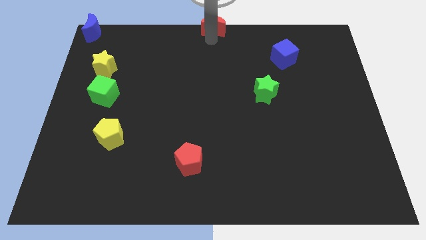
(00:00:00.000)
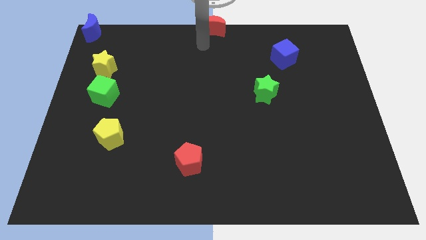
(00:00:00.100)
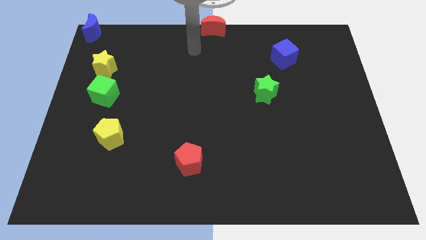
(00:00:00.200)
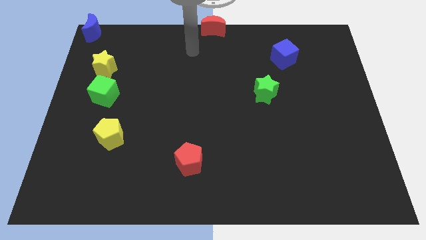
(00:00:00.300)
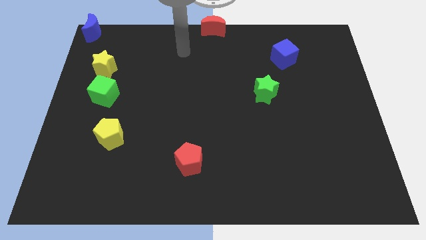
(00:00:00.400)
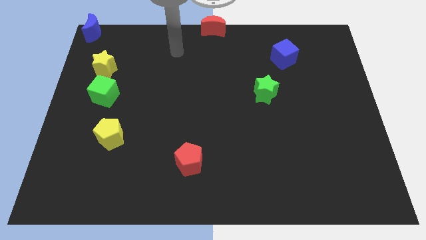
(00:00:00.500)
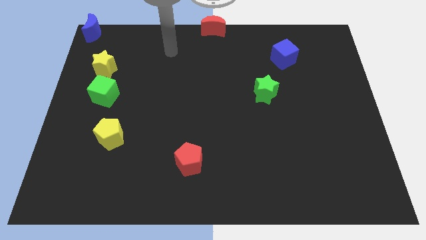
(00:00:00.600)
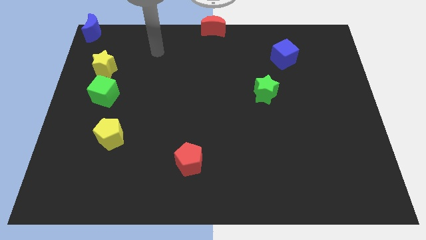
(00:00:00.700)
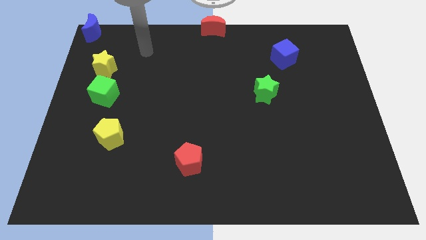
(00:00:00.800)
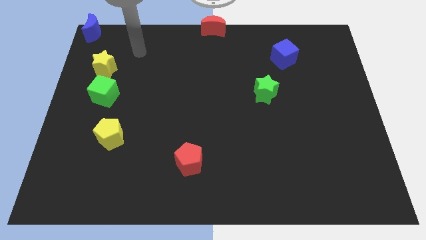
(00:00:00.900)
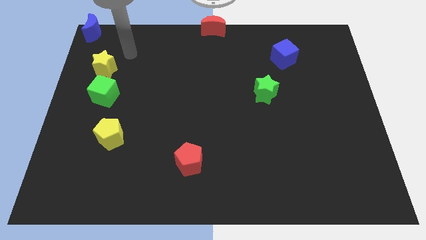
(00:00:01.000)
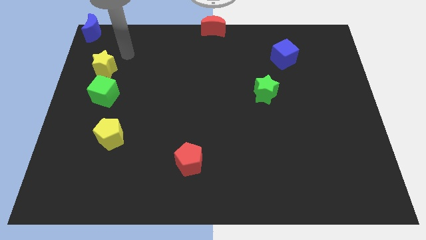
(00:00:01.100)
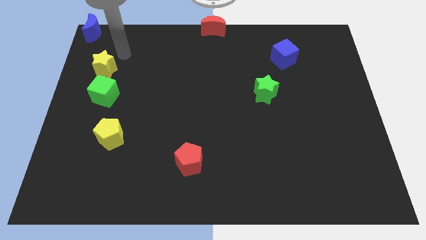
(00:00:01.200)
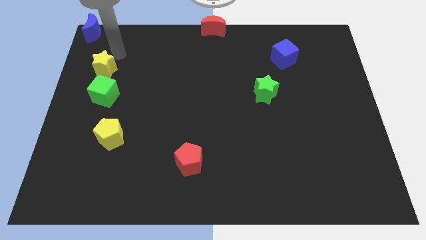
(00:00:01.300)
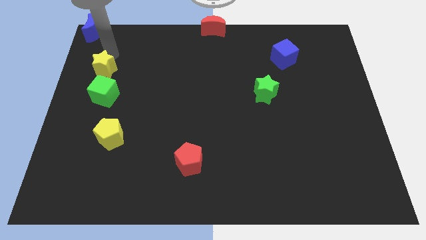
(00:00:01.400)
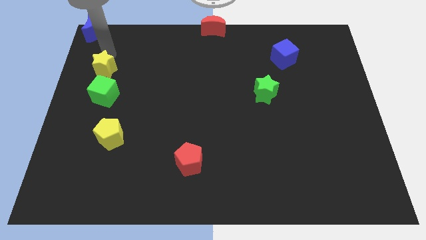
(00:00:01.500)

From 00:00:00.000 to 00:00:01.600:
move your hand towards the top of the yellow star

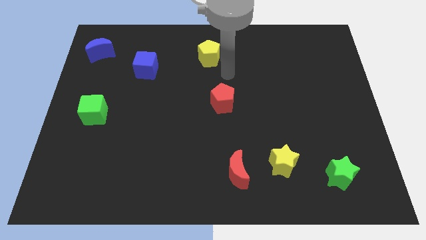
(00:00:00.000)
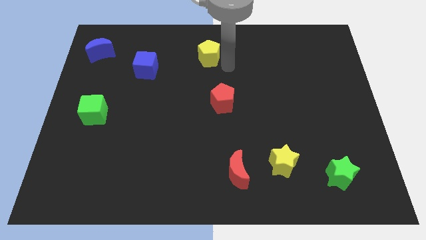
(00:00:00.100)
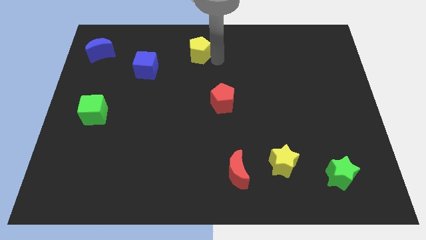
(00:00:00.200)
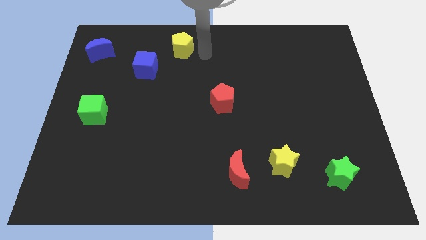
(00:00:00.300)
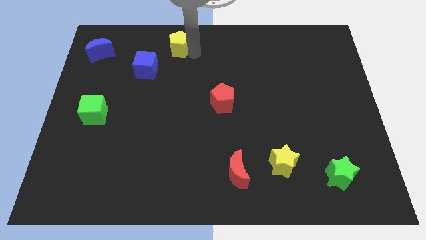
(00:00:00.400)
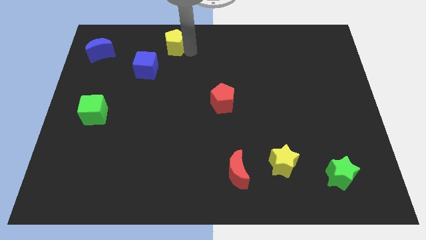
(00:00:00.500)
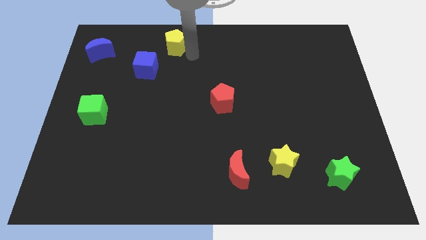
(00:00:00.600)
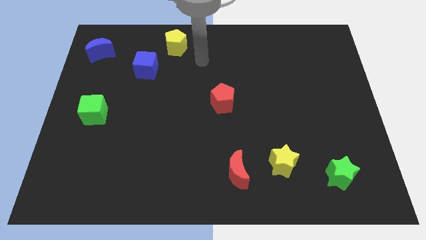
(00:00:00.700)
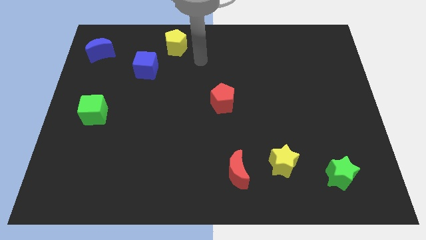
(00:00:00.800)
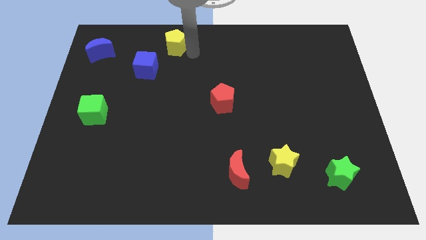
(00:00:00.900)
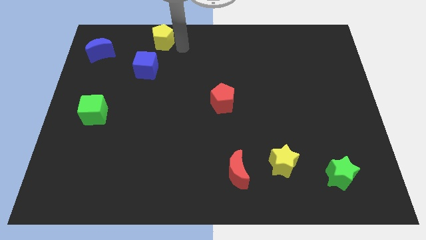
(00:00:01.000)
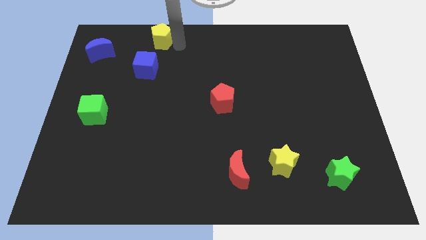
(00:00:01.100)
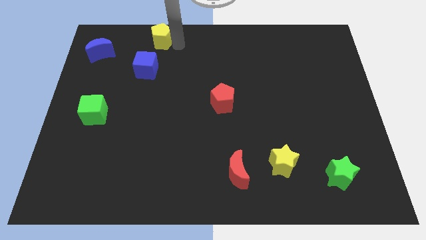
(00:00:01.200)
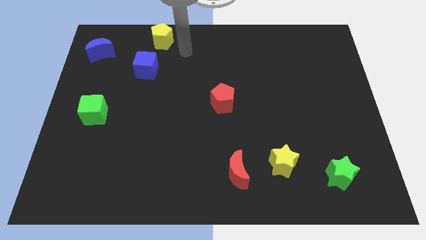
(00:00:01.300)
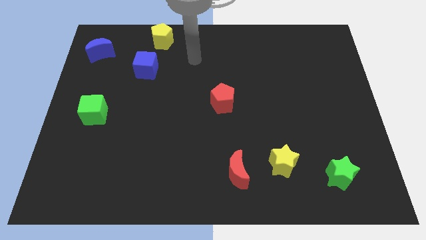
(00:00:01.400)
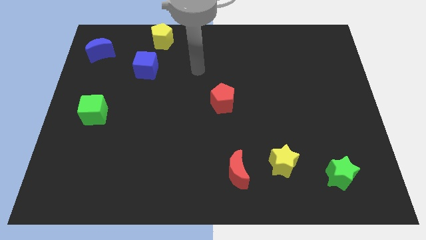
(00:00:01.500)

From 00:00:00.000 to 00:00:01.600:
push the yellow pentagon slightly to the top left of the board

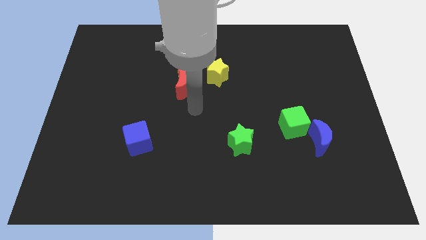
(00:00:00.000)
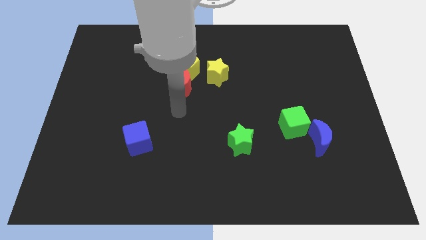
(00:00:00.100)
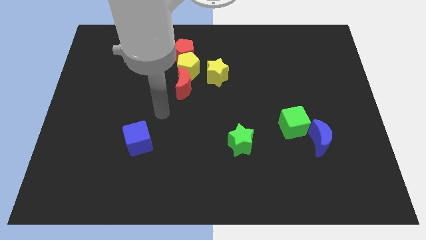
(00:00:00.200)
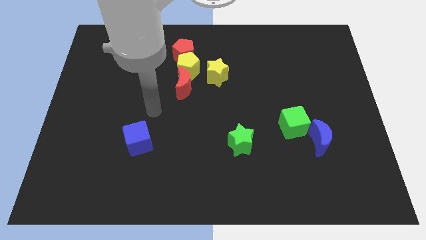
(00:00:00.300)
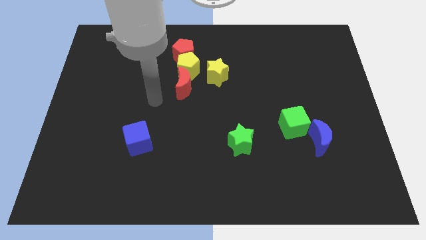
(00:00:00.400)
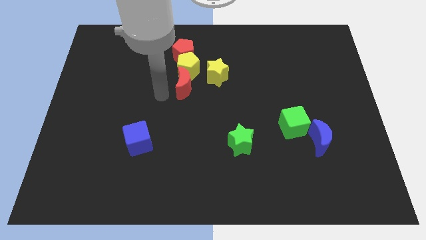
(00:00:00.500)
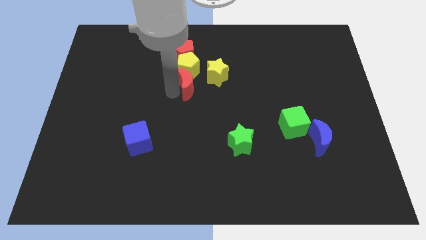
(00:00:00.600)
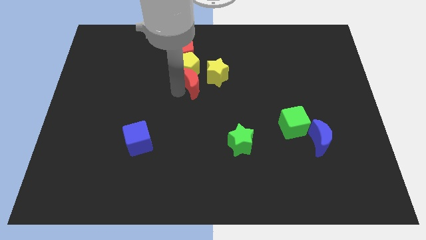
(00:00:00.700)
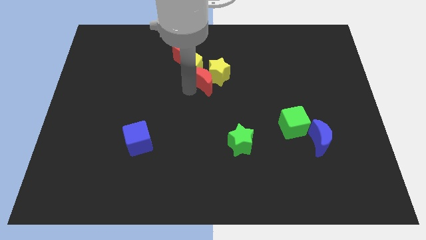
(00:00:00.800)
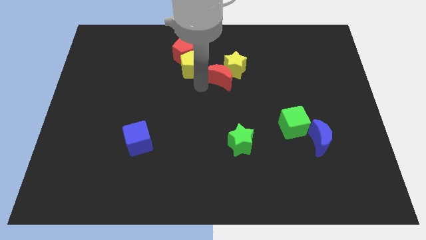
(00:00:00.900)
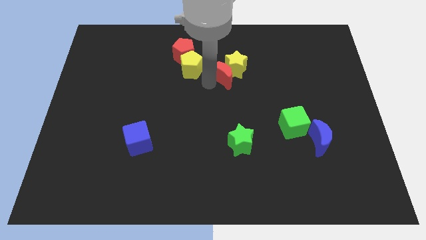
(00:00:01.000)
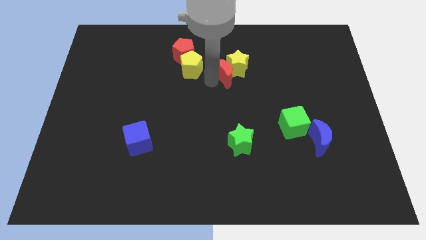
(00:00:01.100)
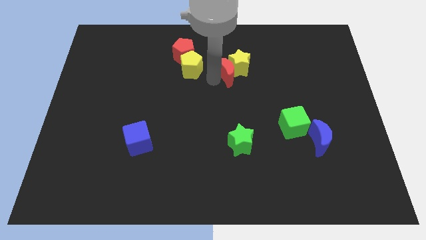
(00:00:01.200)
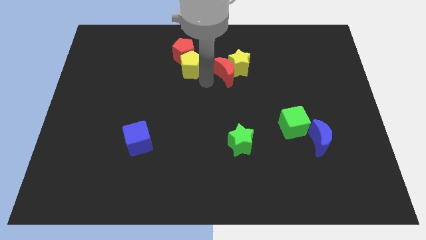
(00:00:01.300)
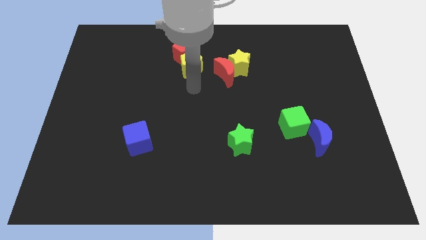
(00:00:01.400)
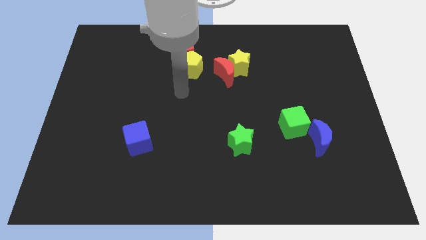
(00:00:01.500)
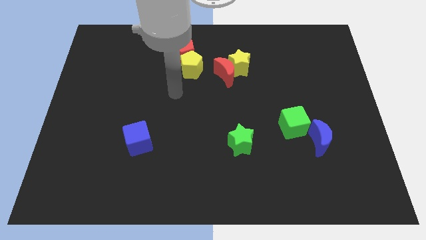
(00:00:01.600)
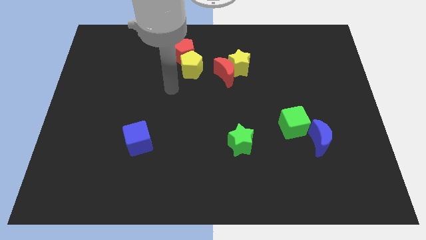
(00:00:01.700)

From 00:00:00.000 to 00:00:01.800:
push red crescent into yellow star

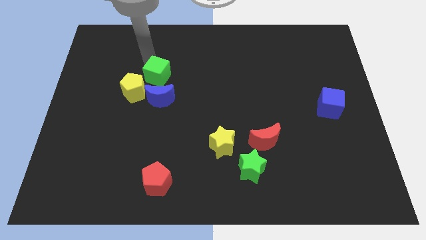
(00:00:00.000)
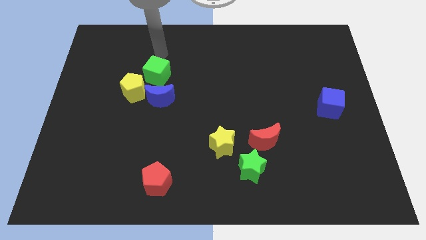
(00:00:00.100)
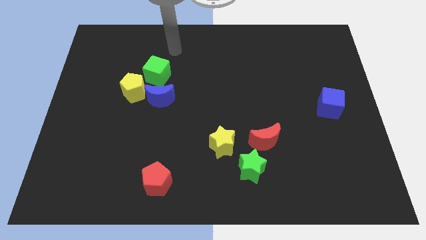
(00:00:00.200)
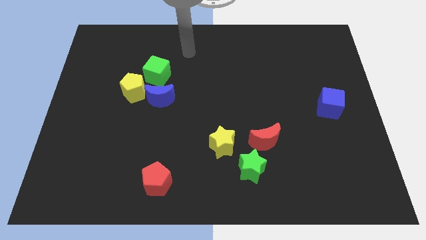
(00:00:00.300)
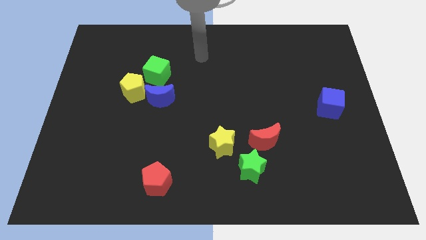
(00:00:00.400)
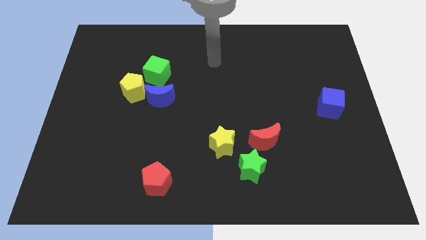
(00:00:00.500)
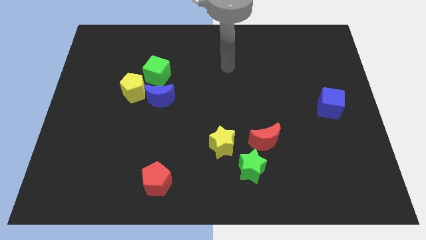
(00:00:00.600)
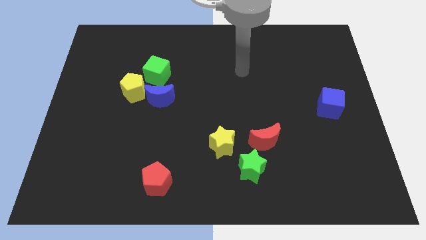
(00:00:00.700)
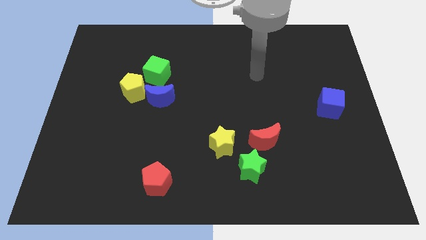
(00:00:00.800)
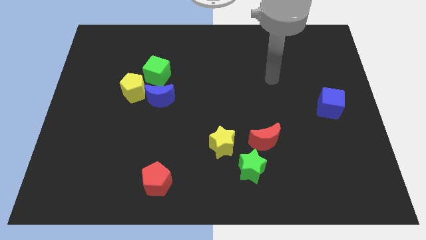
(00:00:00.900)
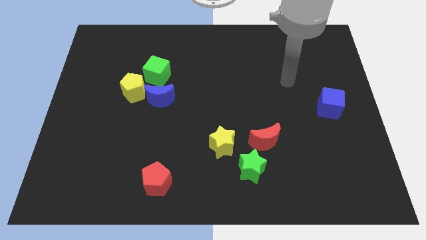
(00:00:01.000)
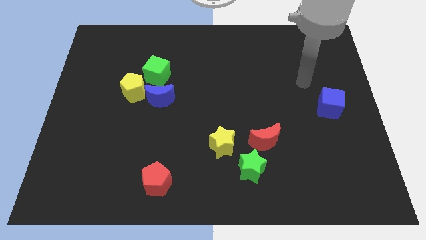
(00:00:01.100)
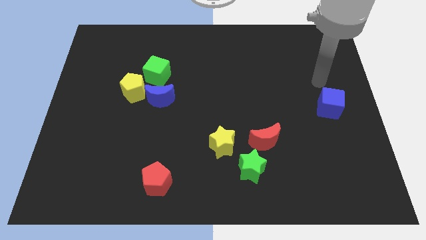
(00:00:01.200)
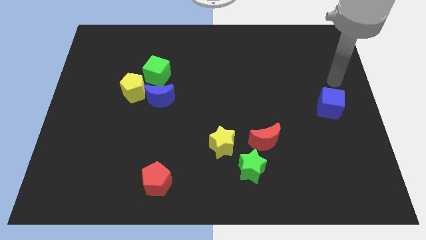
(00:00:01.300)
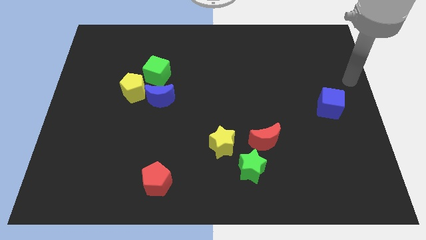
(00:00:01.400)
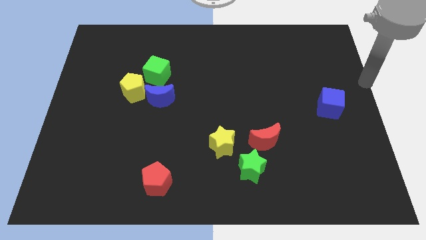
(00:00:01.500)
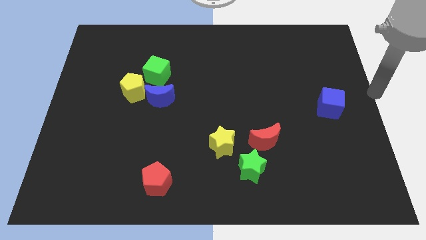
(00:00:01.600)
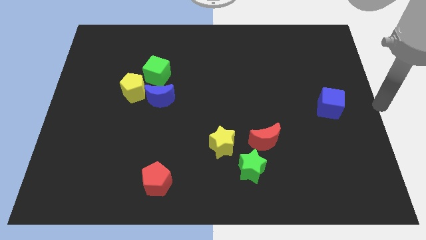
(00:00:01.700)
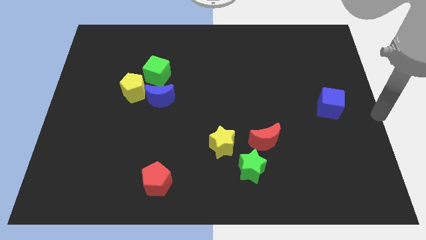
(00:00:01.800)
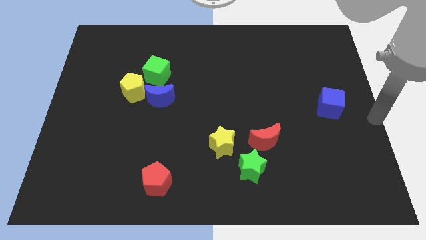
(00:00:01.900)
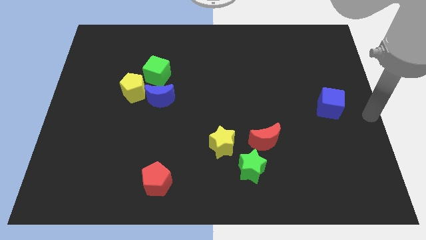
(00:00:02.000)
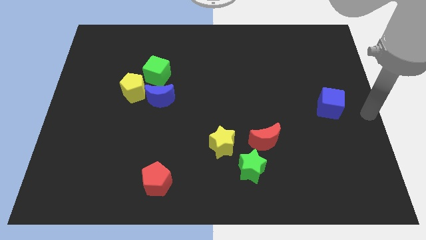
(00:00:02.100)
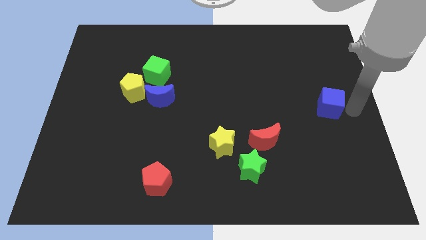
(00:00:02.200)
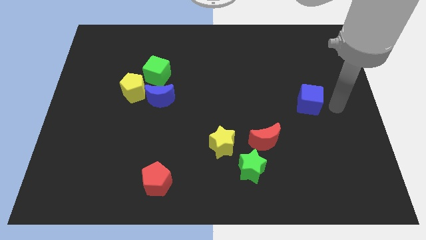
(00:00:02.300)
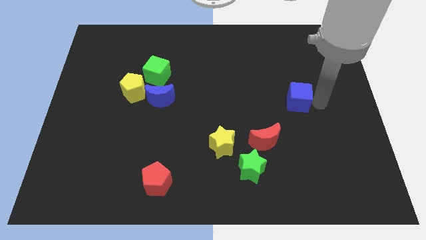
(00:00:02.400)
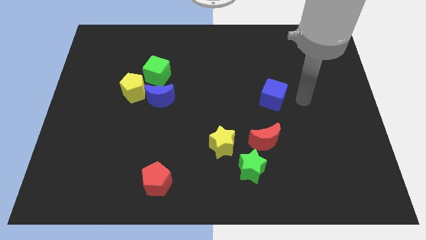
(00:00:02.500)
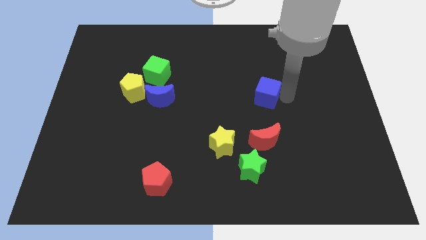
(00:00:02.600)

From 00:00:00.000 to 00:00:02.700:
place blue cube at the center of the board

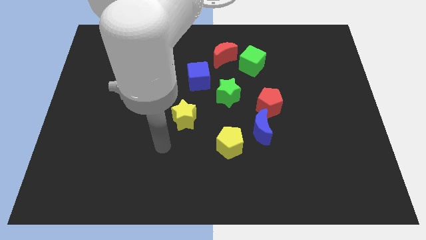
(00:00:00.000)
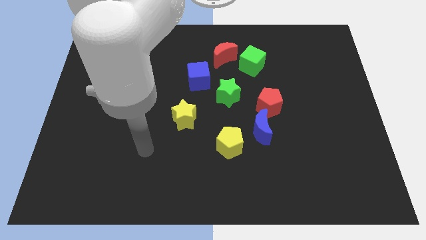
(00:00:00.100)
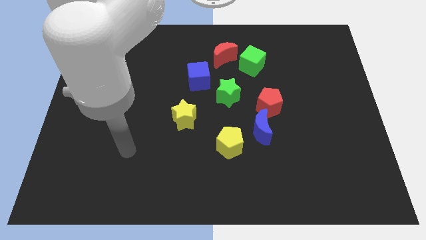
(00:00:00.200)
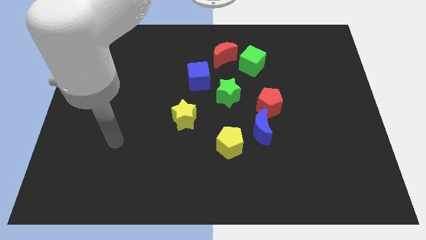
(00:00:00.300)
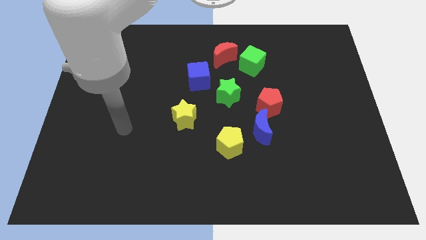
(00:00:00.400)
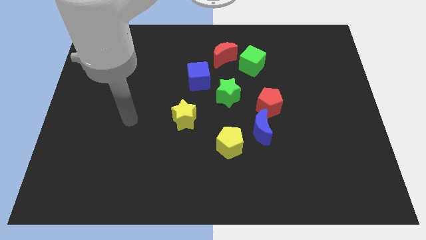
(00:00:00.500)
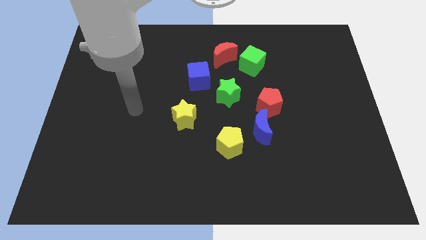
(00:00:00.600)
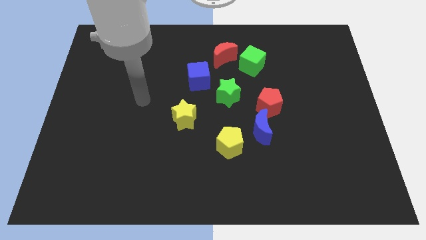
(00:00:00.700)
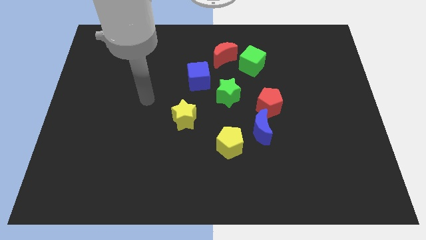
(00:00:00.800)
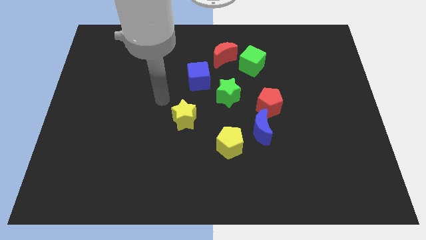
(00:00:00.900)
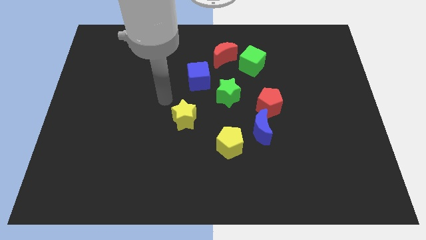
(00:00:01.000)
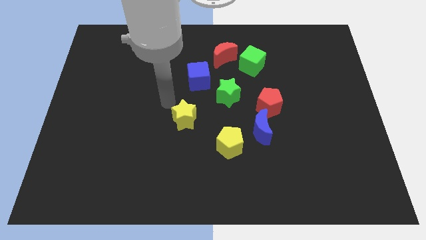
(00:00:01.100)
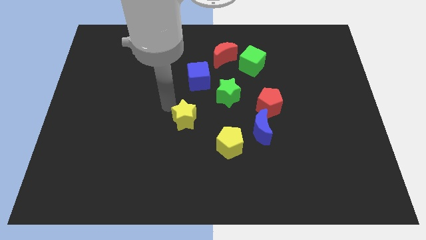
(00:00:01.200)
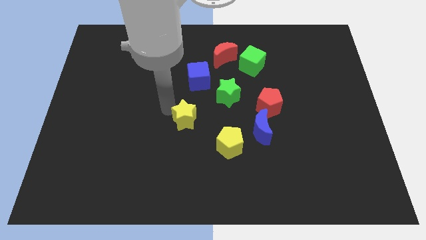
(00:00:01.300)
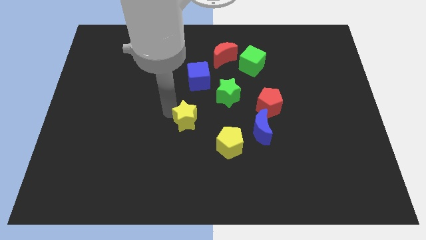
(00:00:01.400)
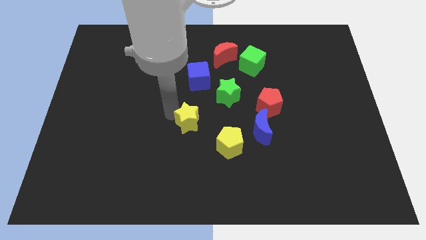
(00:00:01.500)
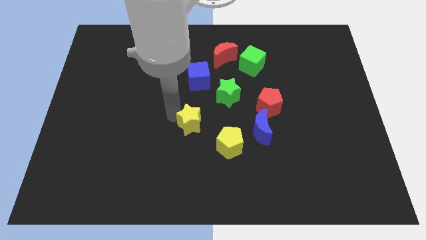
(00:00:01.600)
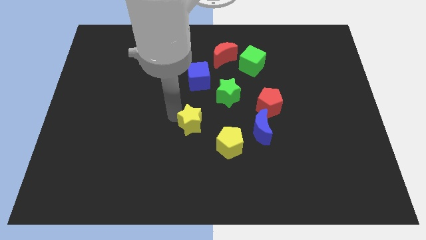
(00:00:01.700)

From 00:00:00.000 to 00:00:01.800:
move the yellow star towards the yellow pentagon
